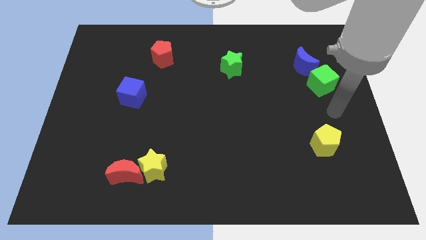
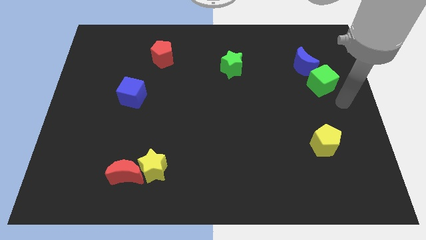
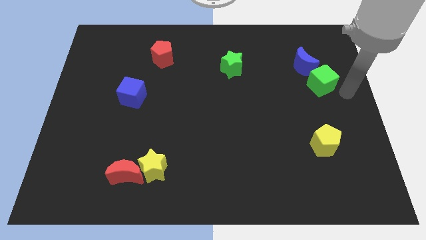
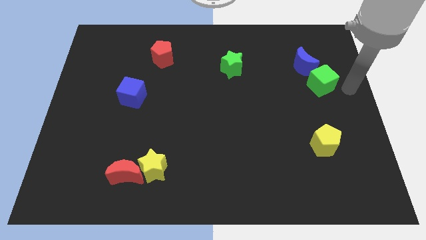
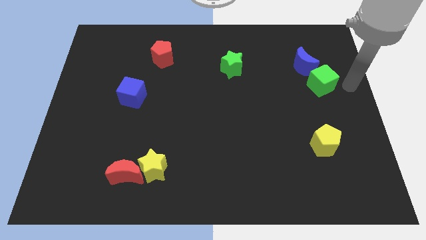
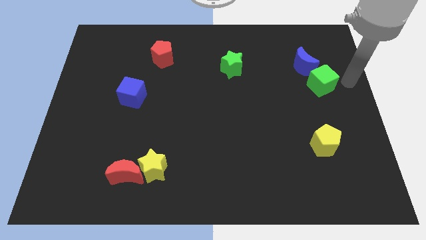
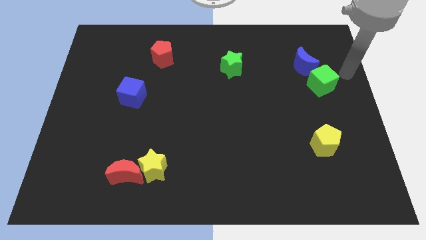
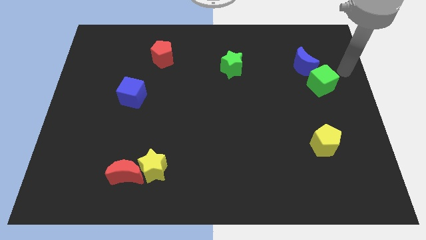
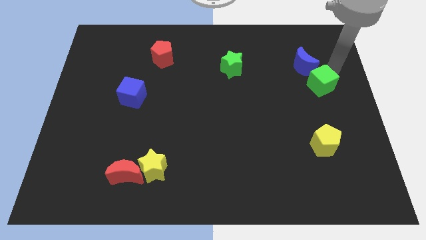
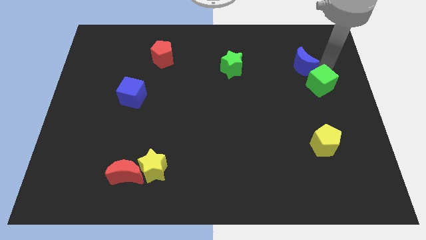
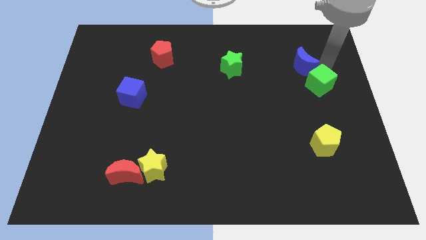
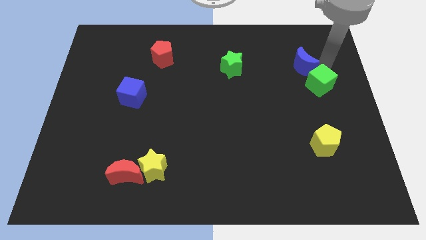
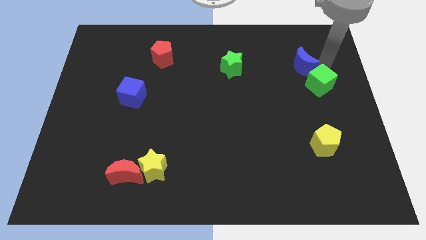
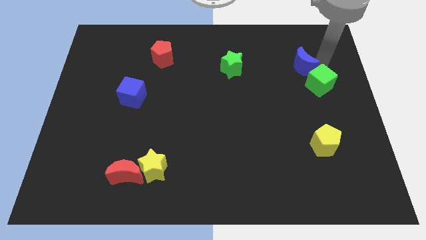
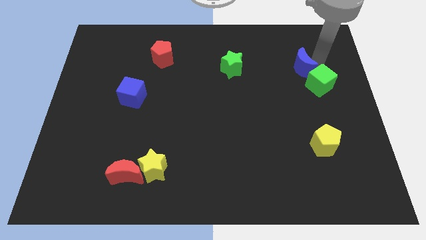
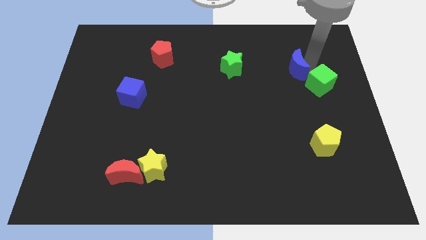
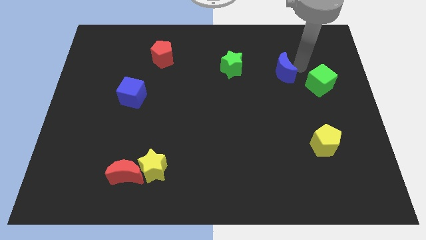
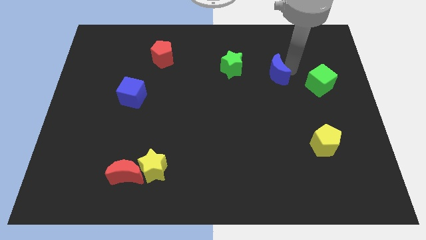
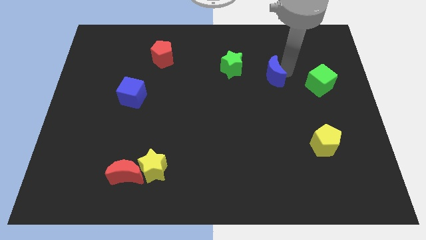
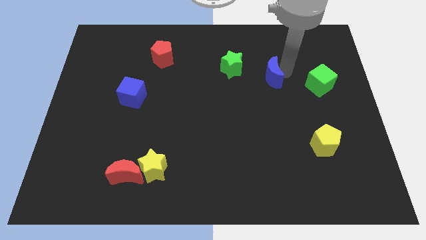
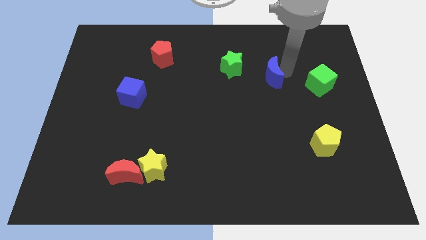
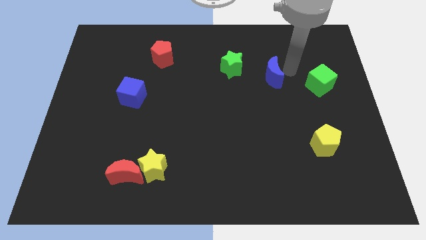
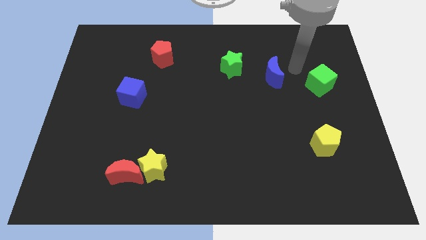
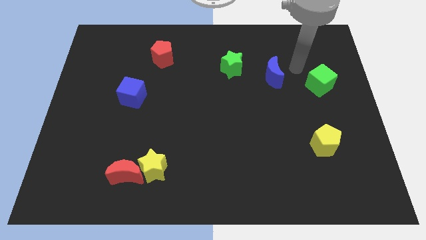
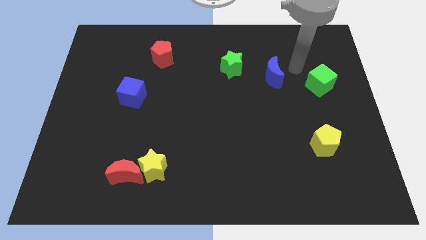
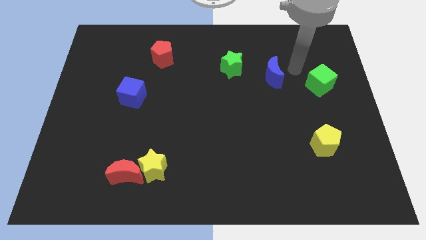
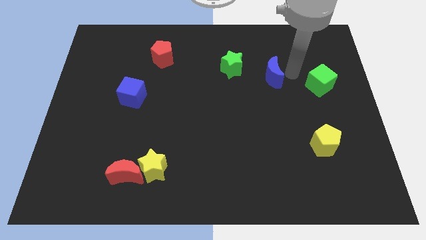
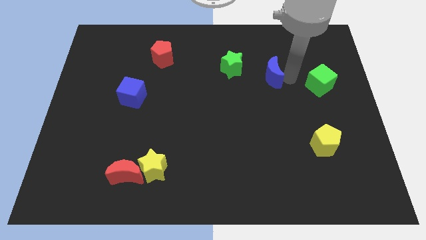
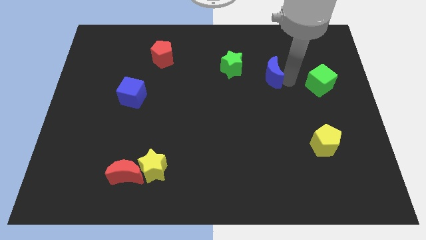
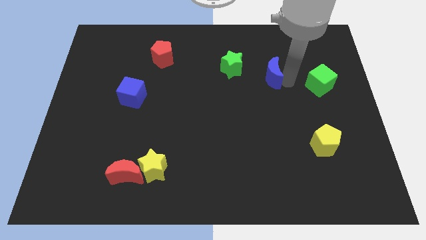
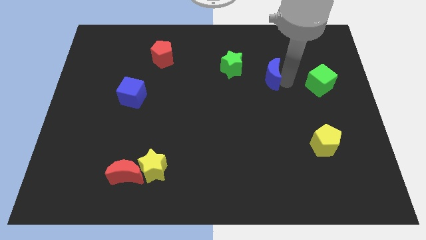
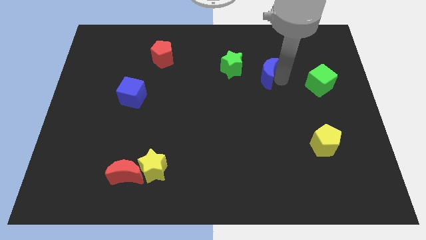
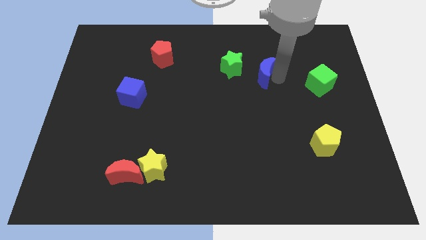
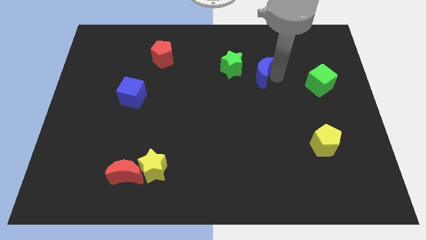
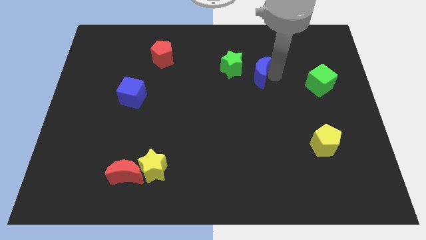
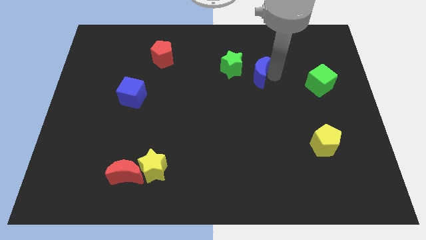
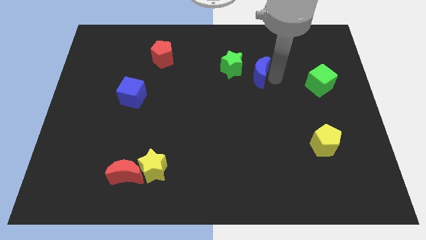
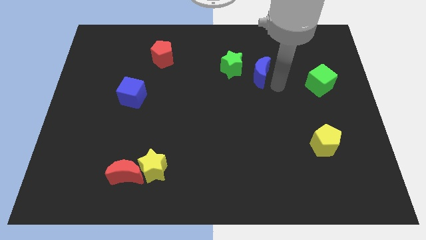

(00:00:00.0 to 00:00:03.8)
push the blue crescent towards the green star

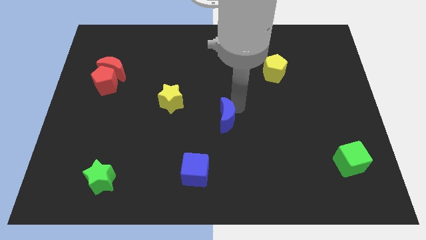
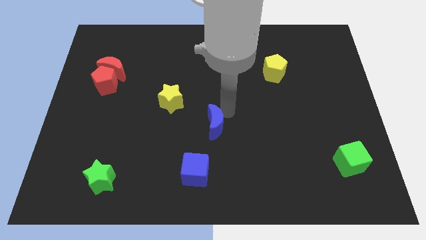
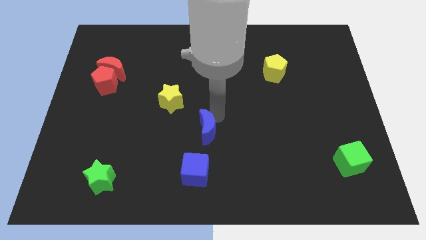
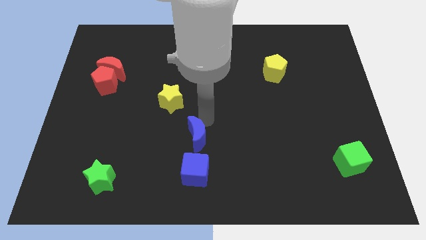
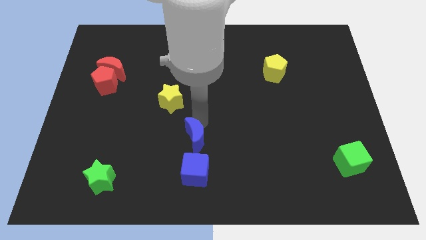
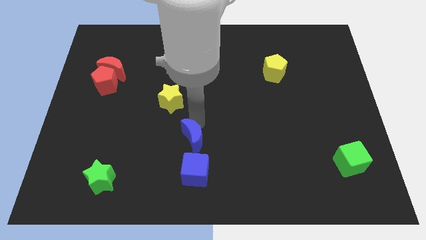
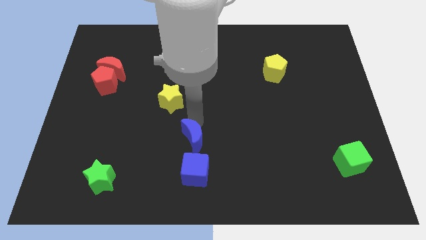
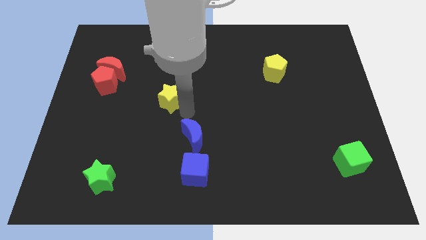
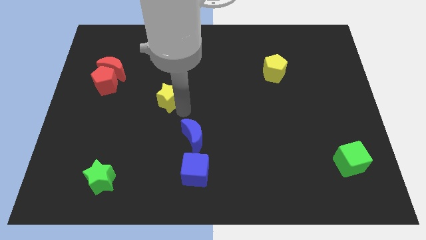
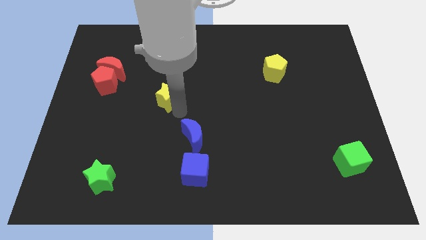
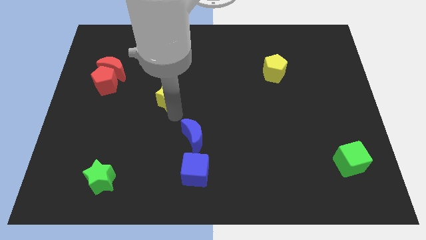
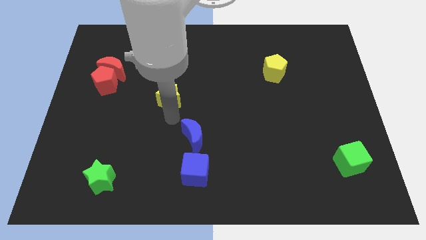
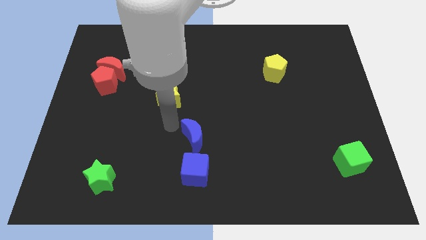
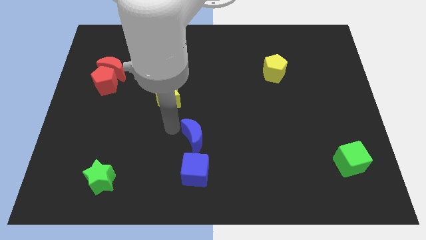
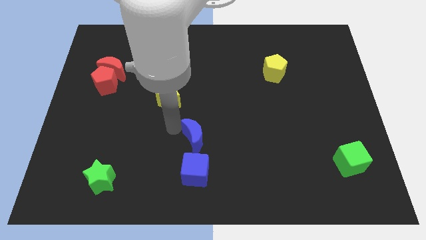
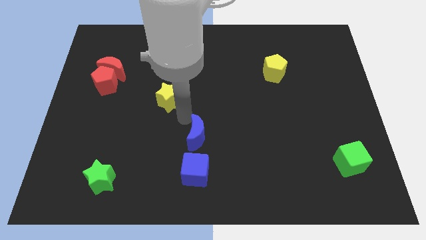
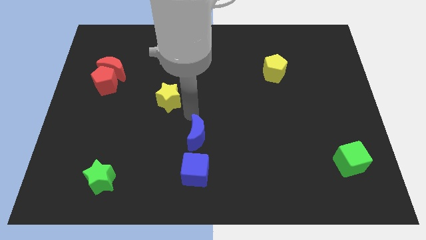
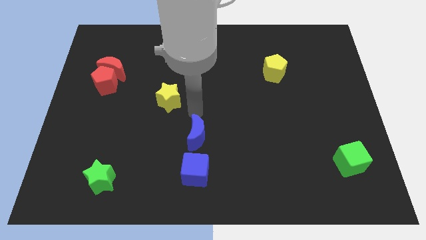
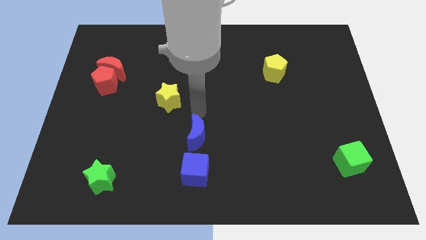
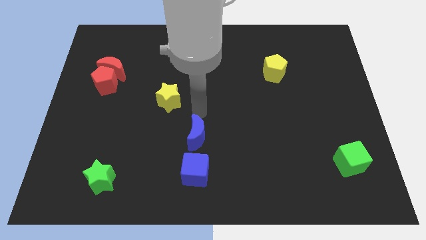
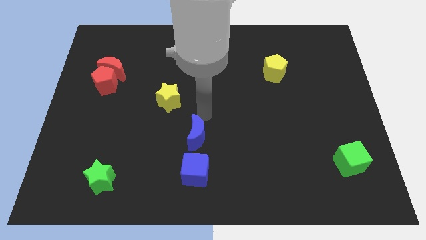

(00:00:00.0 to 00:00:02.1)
drag the blue moon to the top of blue cube

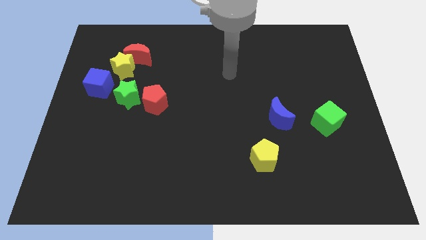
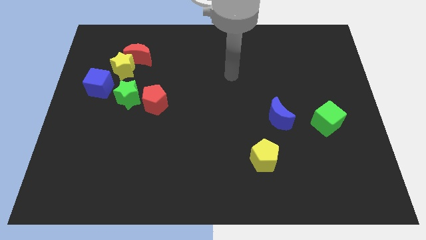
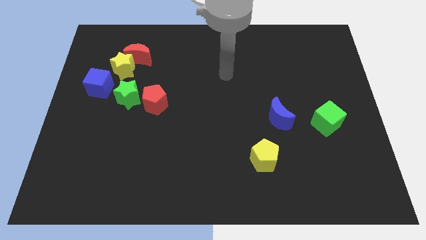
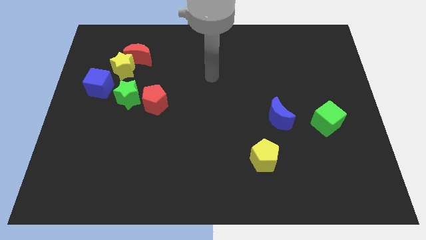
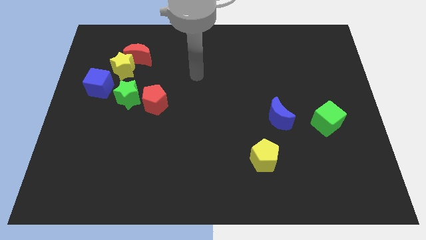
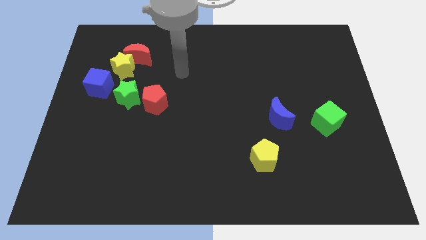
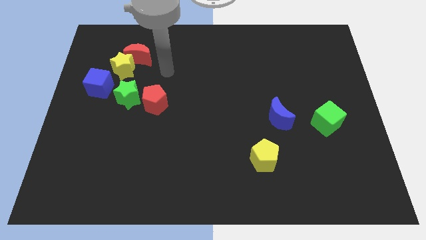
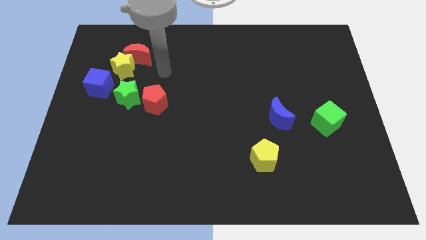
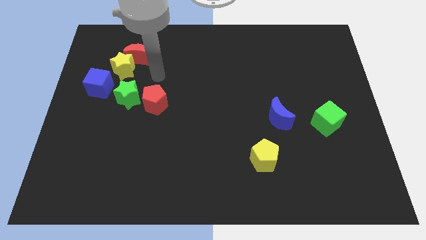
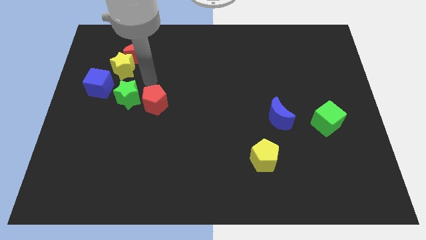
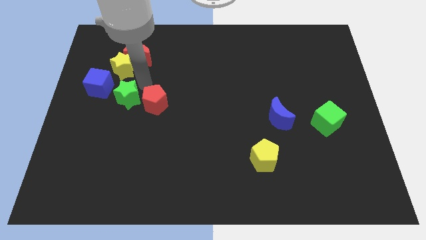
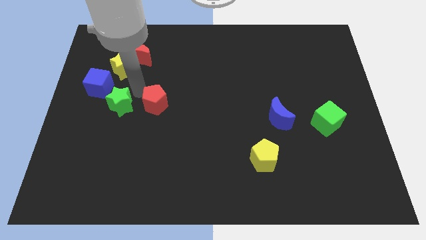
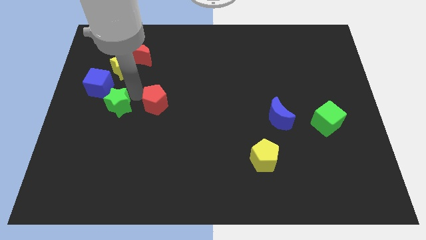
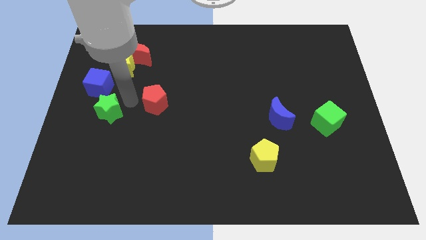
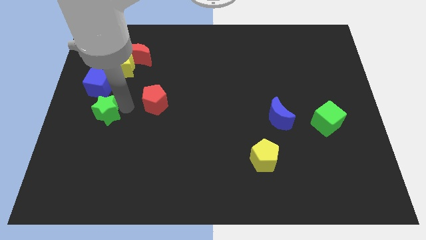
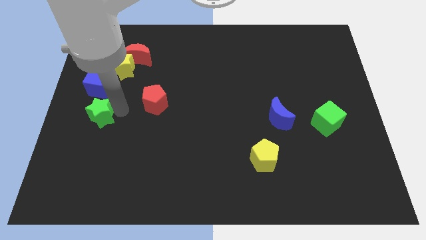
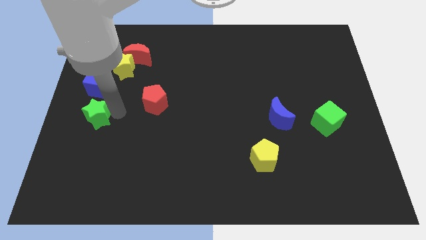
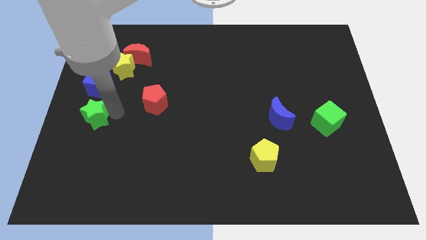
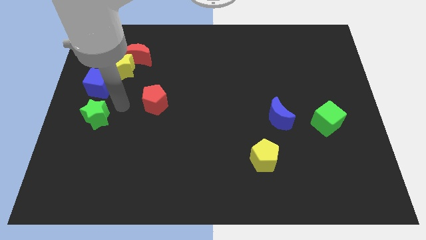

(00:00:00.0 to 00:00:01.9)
move the green star towards the center left

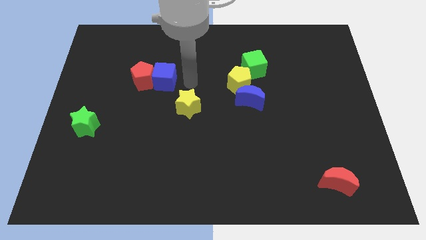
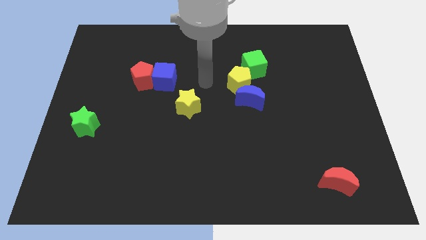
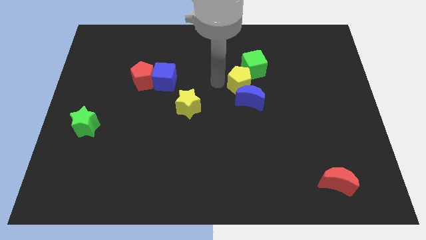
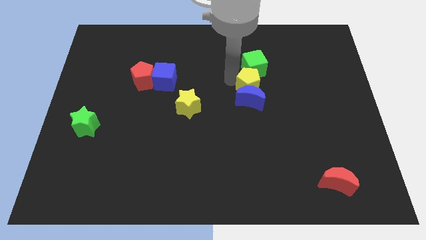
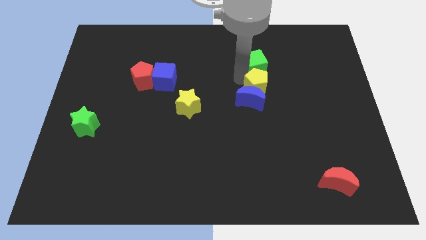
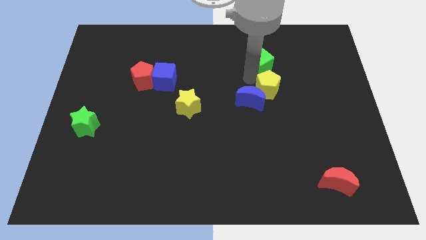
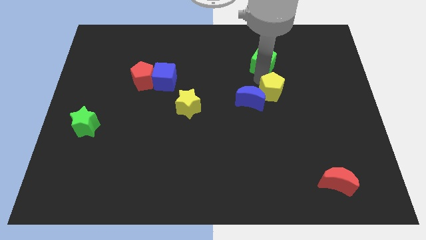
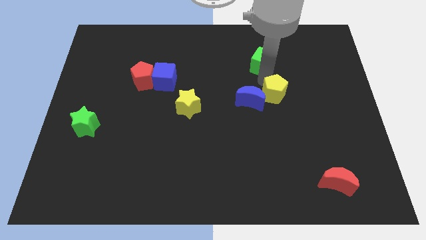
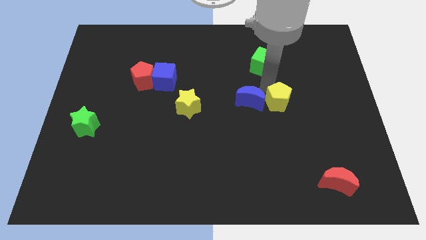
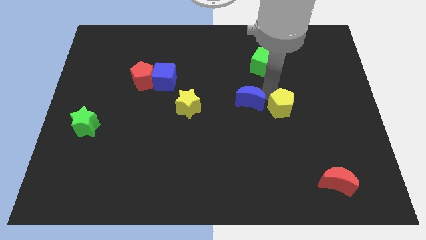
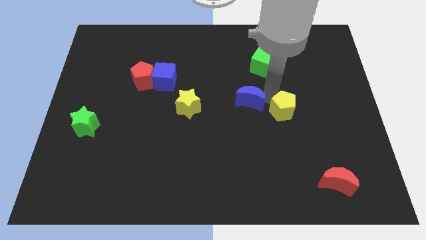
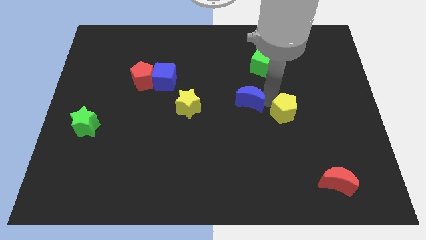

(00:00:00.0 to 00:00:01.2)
slide the yellow pentagon diagonally on the bottom right side of the green cube
